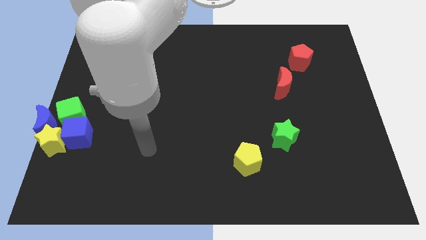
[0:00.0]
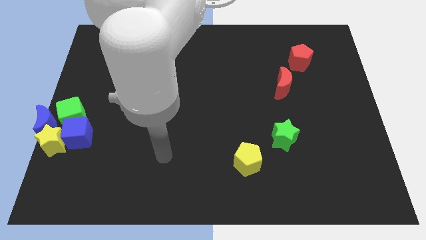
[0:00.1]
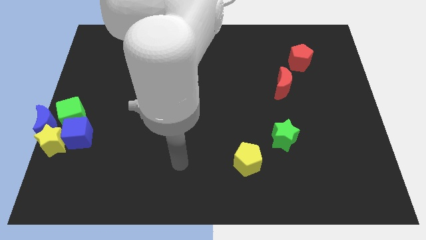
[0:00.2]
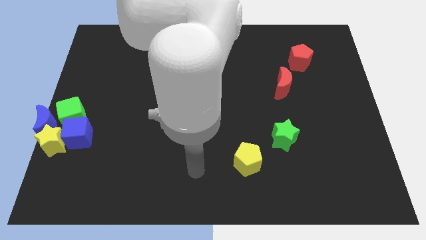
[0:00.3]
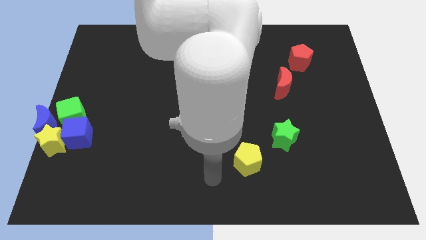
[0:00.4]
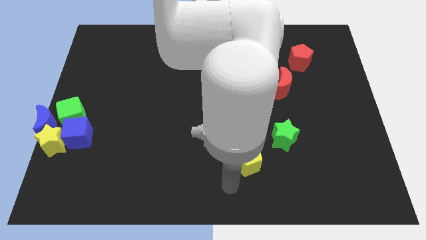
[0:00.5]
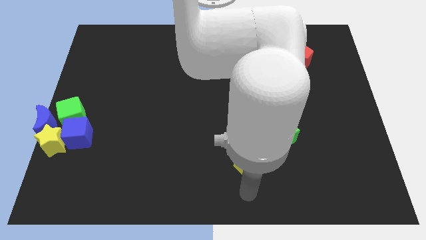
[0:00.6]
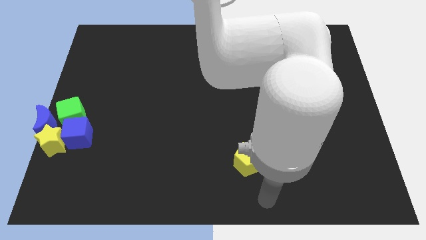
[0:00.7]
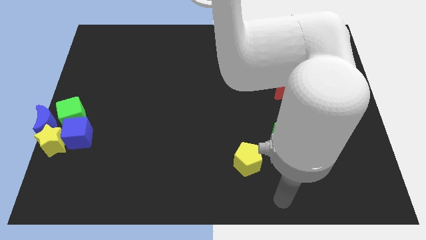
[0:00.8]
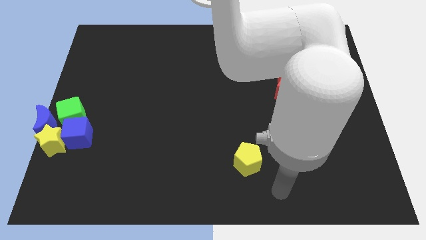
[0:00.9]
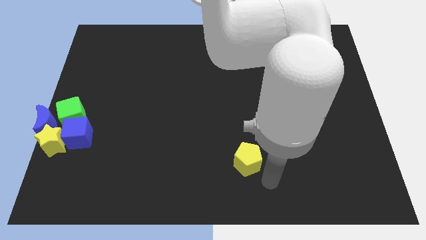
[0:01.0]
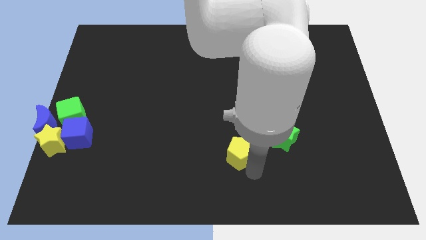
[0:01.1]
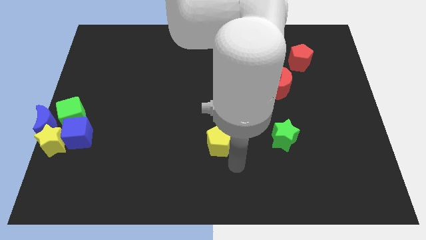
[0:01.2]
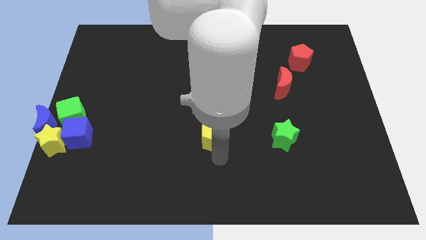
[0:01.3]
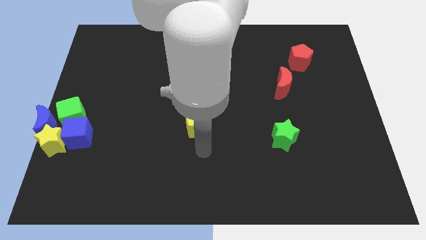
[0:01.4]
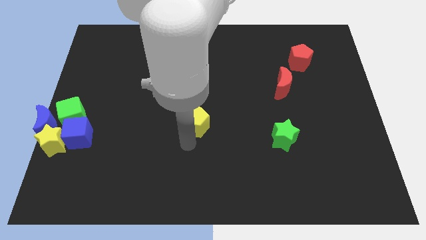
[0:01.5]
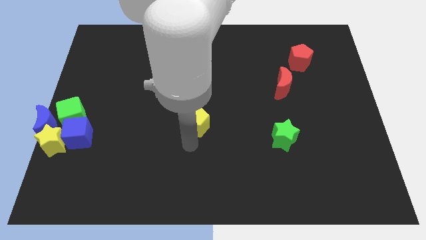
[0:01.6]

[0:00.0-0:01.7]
put the yellow pentagon parallel left to the green star

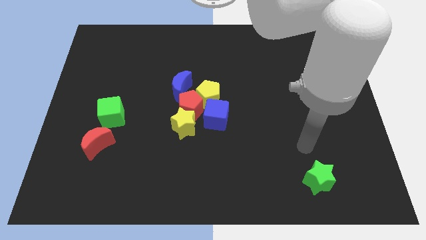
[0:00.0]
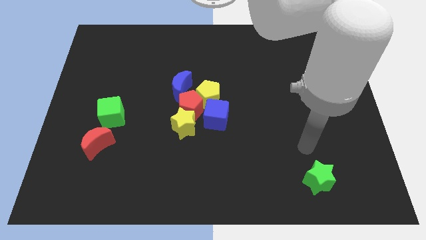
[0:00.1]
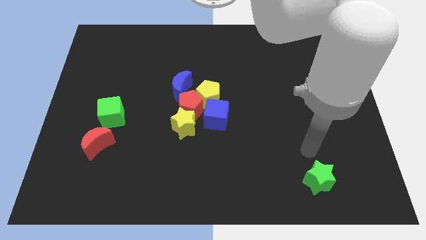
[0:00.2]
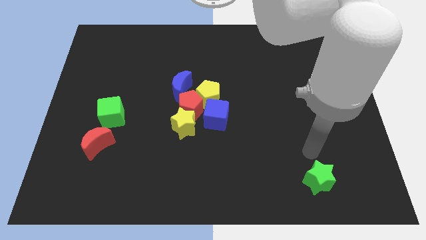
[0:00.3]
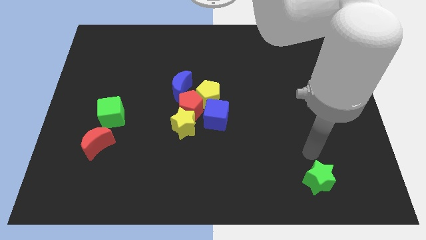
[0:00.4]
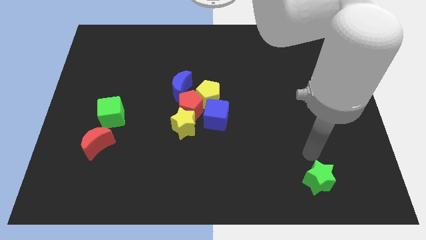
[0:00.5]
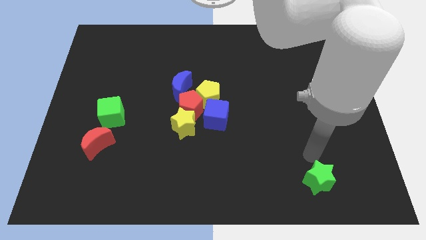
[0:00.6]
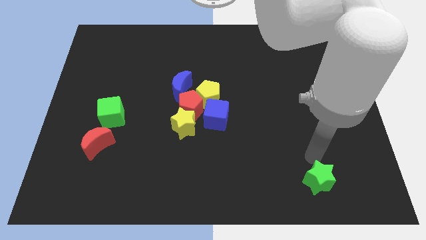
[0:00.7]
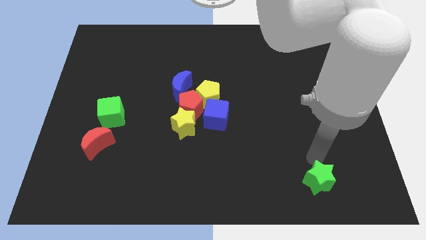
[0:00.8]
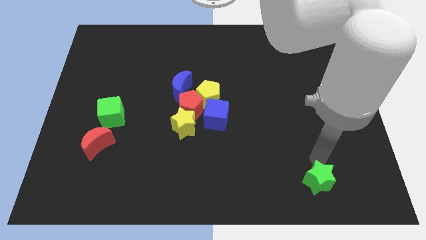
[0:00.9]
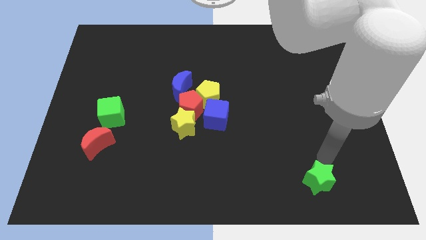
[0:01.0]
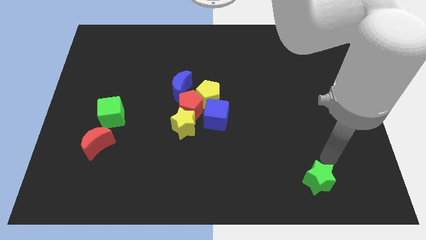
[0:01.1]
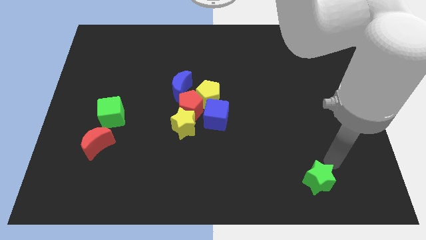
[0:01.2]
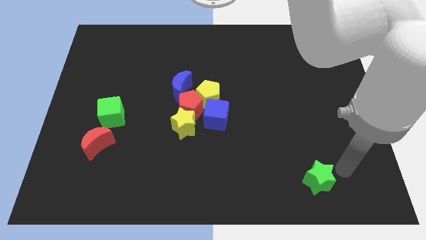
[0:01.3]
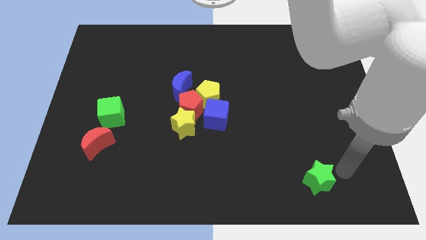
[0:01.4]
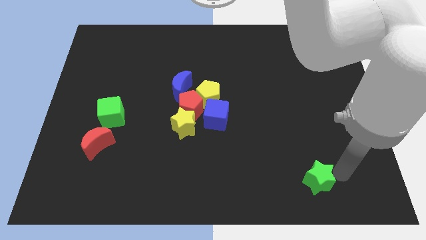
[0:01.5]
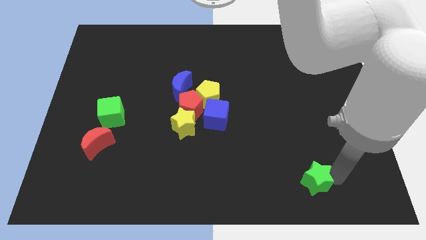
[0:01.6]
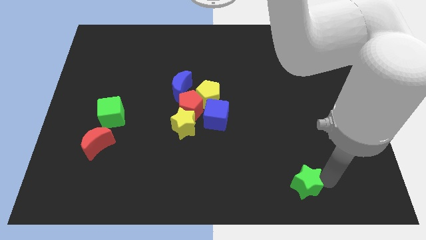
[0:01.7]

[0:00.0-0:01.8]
place the arm to the right green star

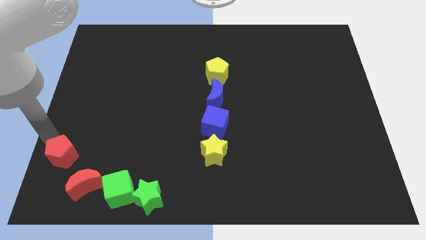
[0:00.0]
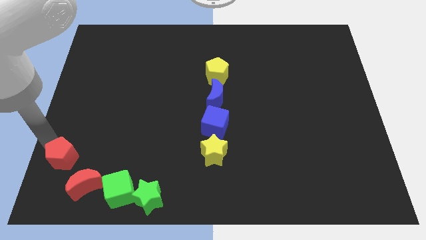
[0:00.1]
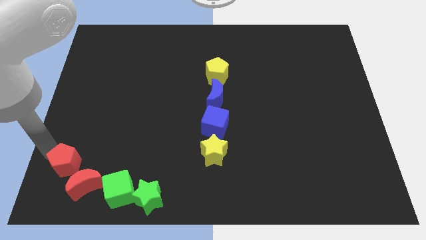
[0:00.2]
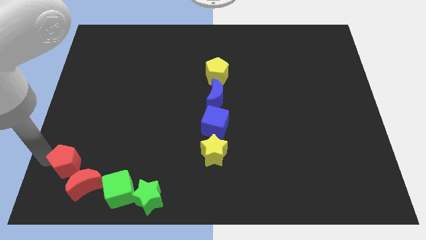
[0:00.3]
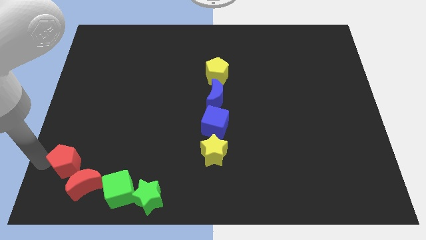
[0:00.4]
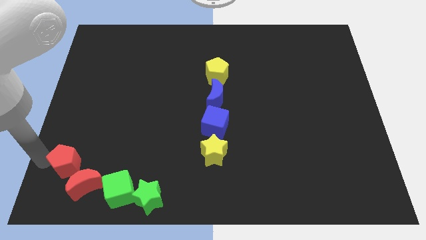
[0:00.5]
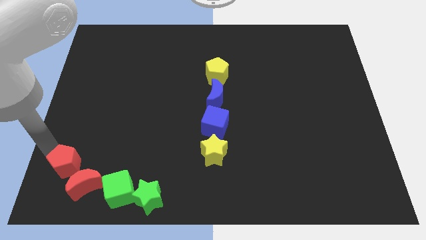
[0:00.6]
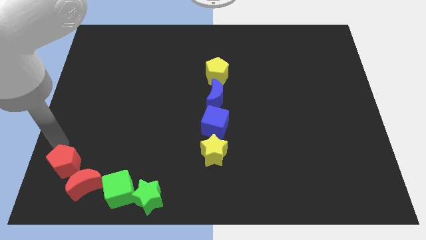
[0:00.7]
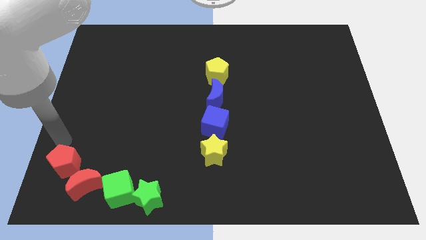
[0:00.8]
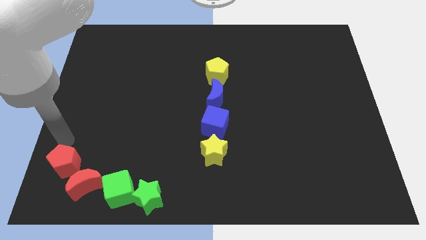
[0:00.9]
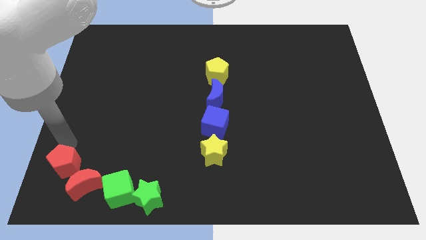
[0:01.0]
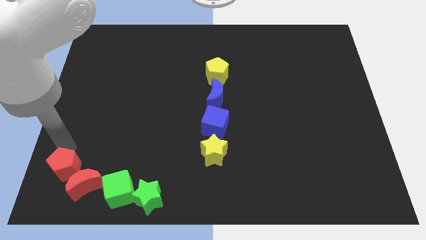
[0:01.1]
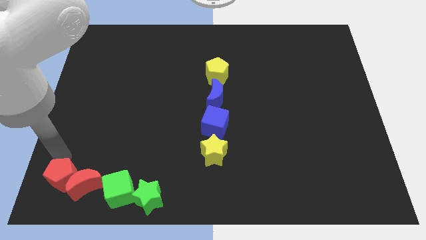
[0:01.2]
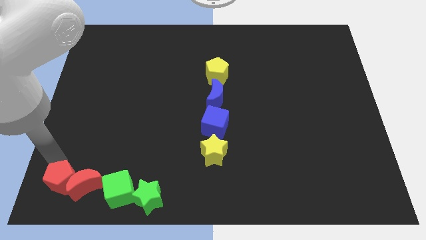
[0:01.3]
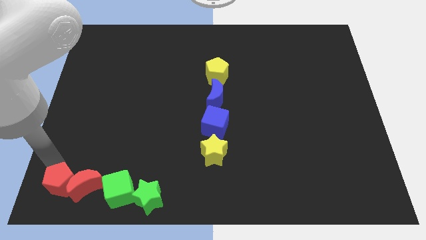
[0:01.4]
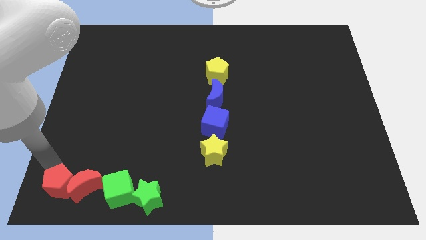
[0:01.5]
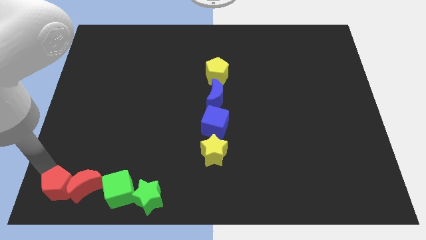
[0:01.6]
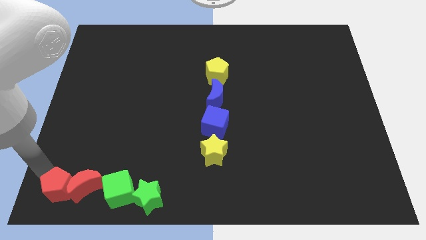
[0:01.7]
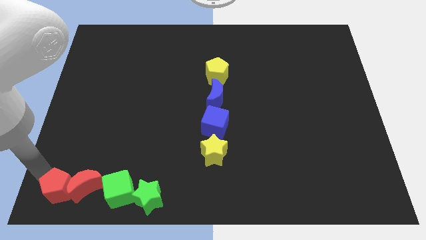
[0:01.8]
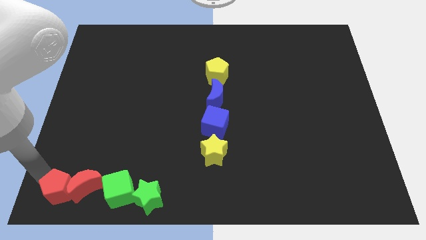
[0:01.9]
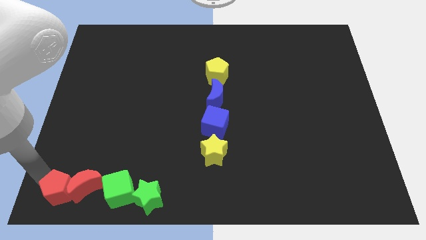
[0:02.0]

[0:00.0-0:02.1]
push the red pentagon to the left of the red crescent

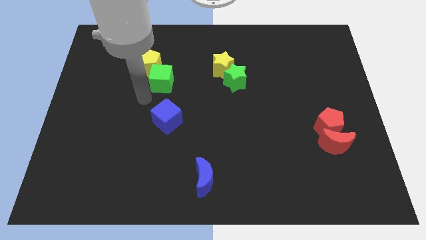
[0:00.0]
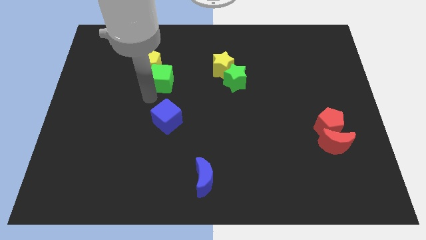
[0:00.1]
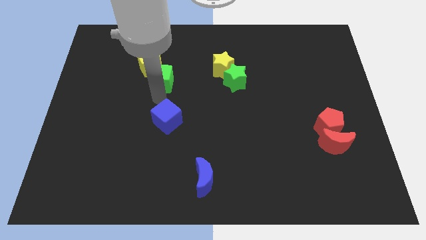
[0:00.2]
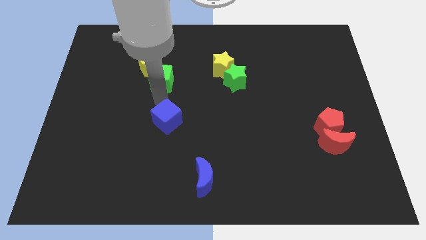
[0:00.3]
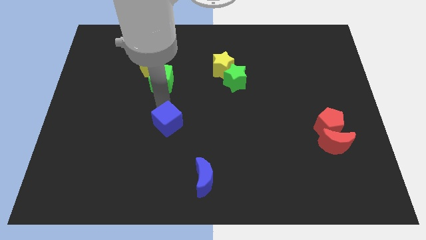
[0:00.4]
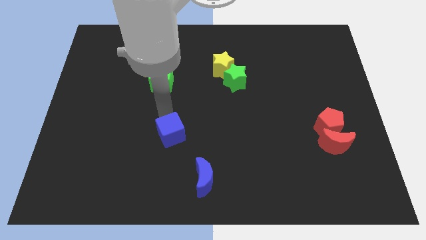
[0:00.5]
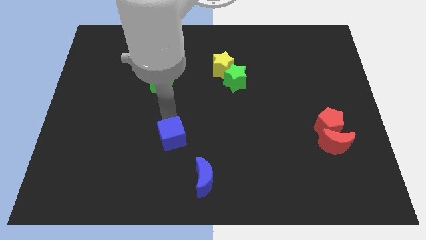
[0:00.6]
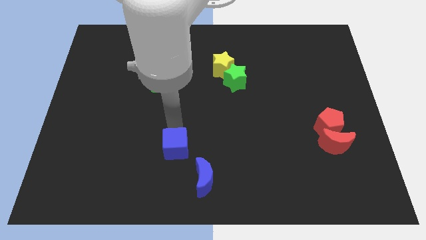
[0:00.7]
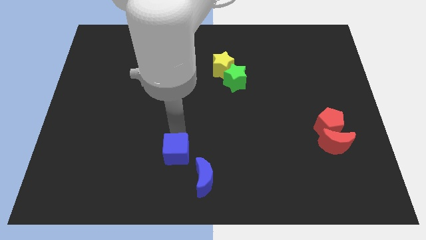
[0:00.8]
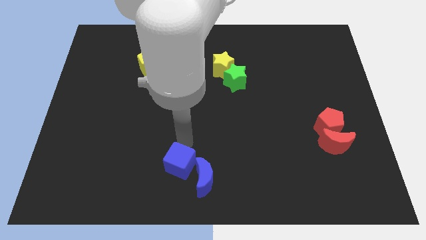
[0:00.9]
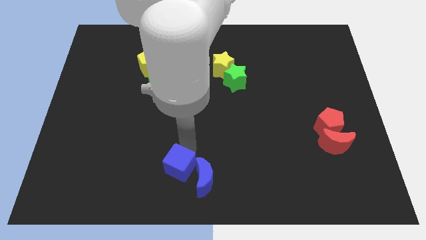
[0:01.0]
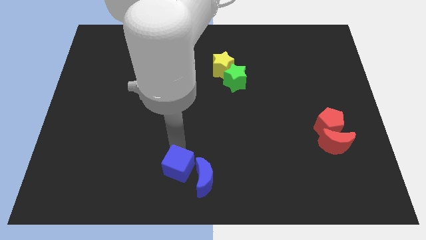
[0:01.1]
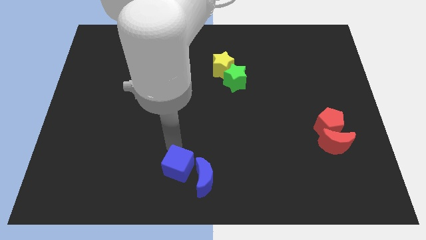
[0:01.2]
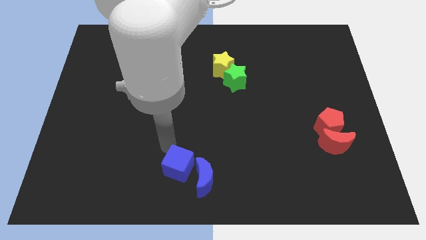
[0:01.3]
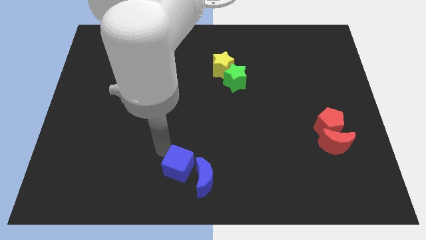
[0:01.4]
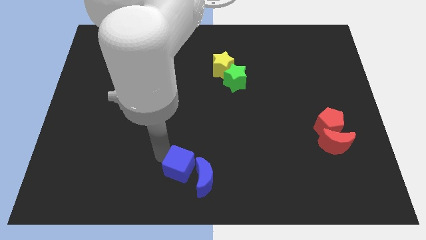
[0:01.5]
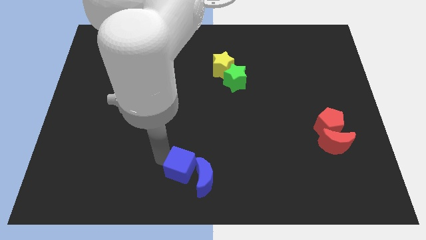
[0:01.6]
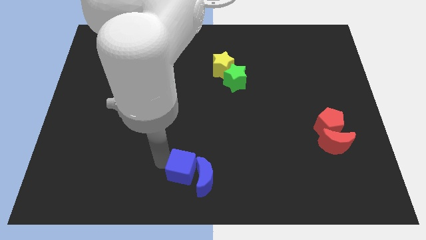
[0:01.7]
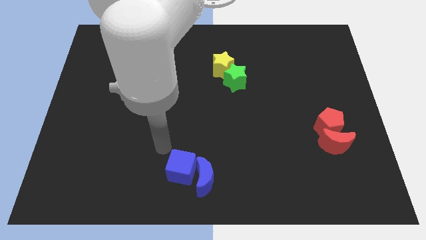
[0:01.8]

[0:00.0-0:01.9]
push the blue cube into the blue crescent

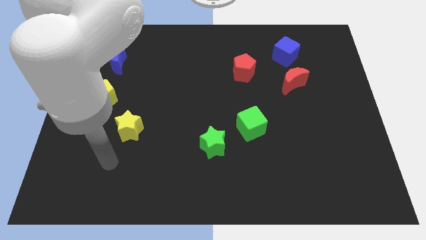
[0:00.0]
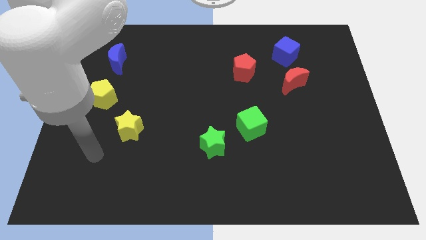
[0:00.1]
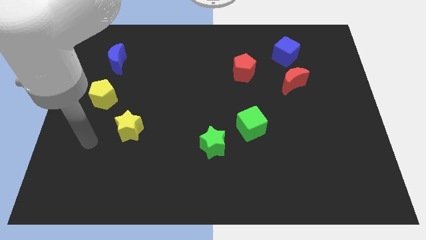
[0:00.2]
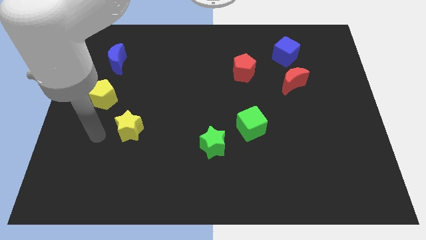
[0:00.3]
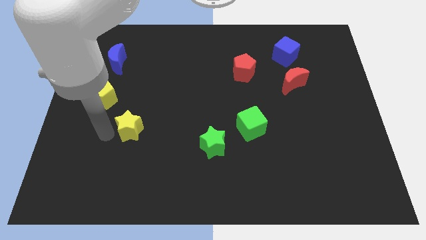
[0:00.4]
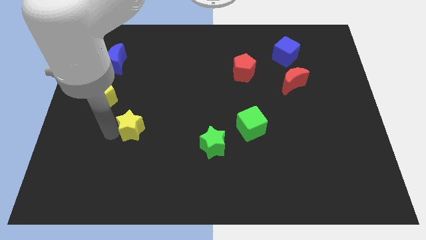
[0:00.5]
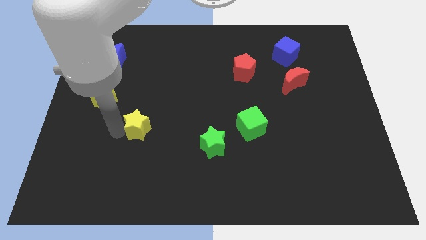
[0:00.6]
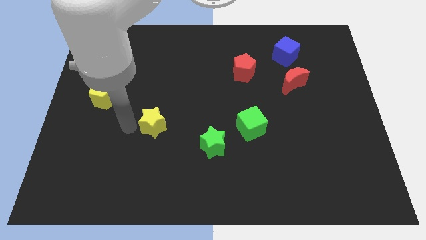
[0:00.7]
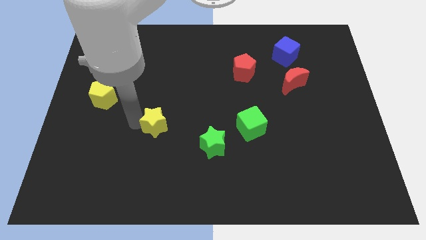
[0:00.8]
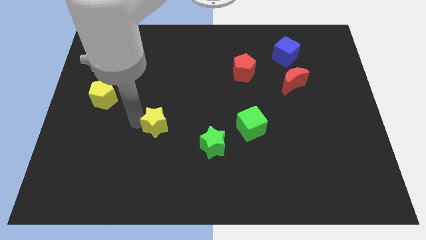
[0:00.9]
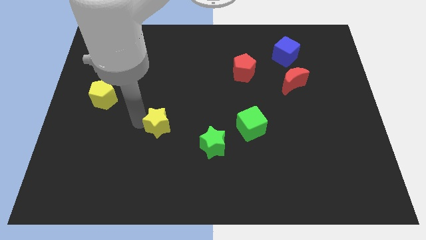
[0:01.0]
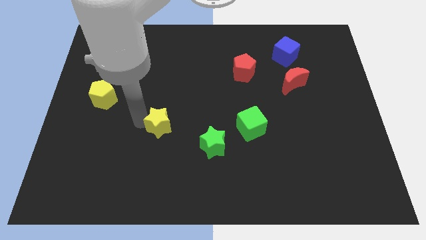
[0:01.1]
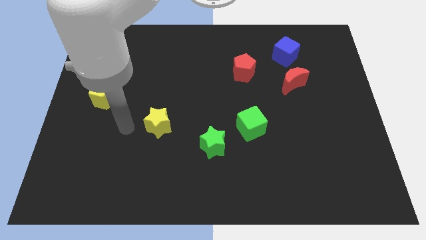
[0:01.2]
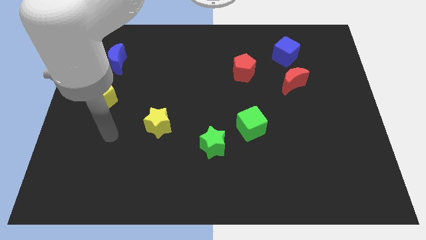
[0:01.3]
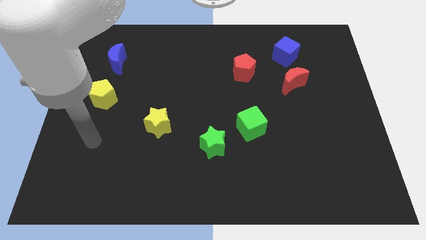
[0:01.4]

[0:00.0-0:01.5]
put yellow star diagonally in between the yellow pentagon green star

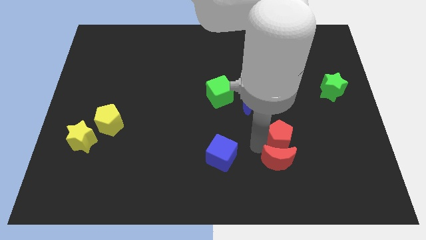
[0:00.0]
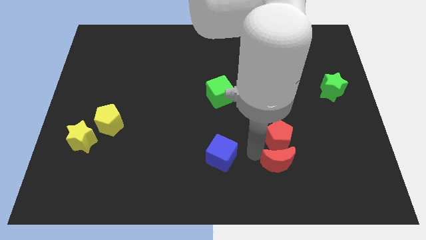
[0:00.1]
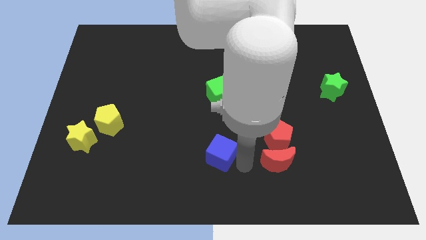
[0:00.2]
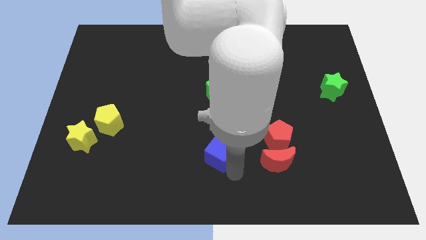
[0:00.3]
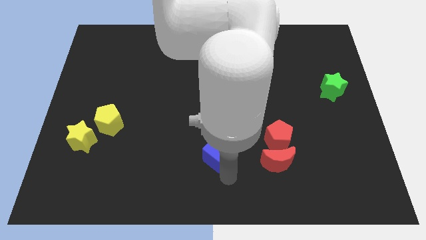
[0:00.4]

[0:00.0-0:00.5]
push the red blocks towards right
